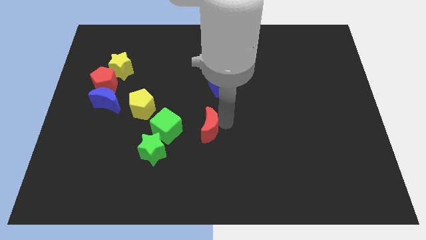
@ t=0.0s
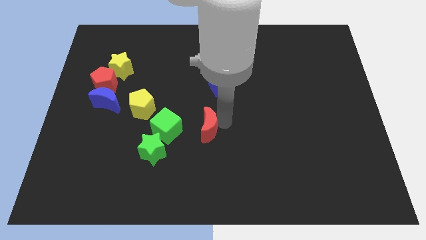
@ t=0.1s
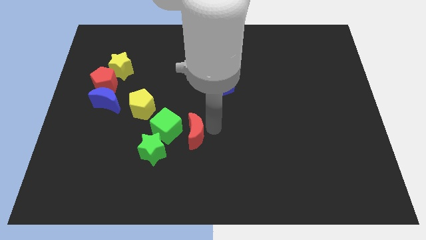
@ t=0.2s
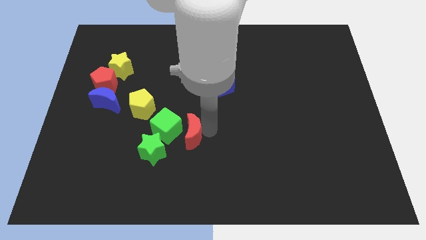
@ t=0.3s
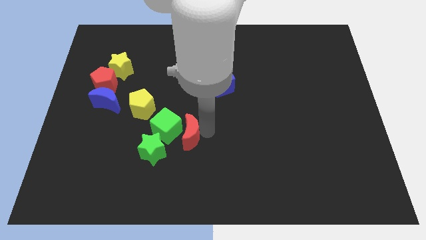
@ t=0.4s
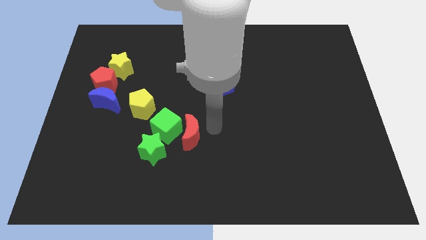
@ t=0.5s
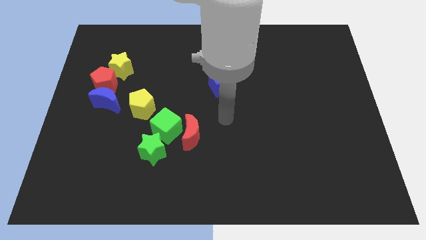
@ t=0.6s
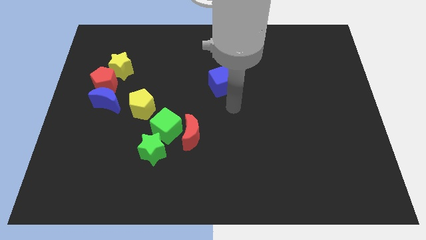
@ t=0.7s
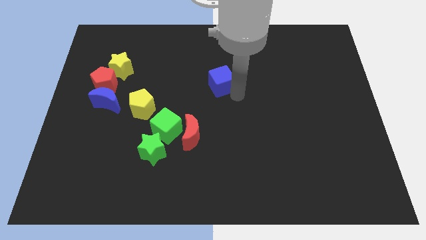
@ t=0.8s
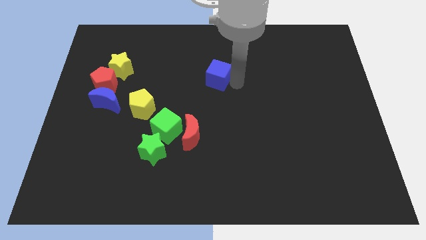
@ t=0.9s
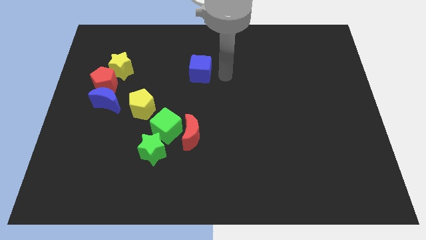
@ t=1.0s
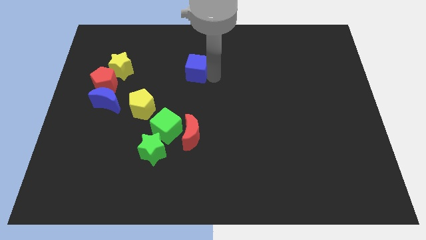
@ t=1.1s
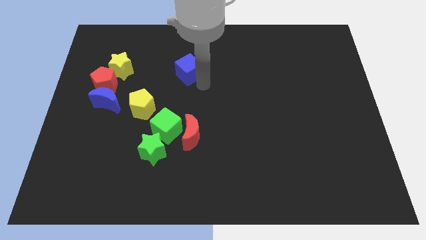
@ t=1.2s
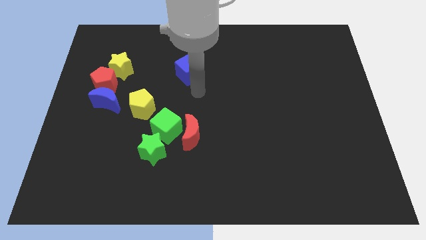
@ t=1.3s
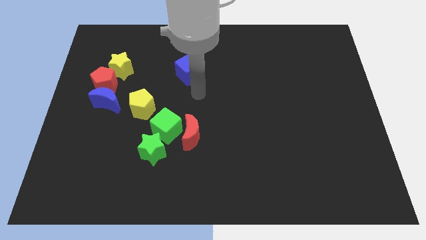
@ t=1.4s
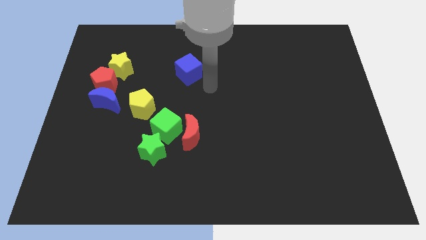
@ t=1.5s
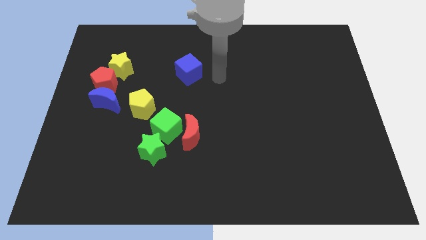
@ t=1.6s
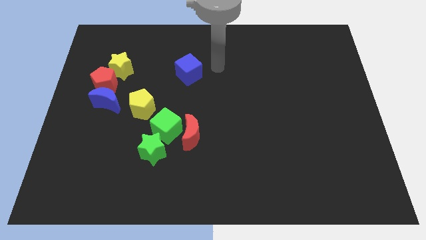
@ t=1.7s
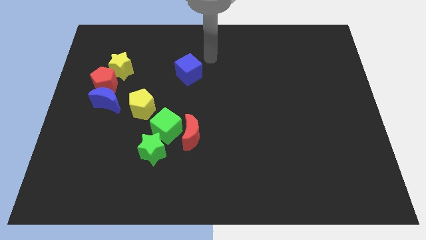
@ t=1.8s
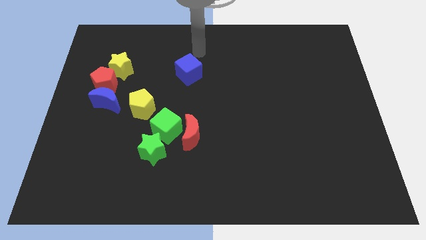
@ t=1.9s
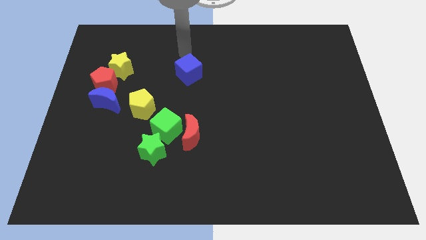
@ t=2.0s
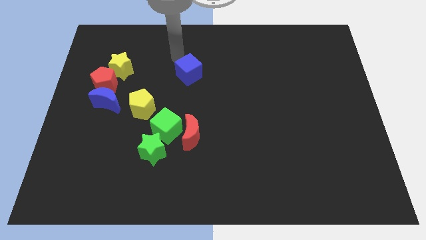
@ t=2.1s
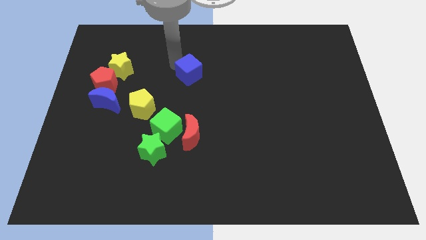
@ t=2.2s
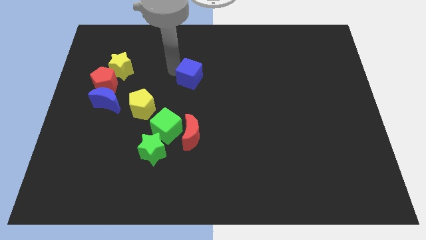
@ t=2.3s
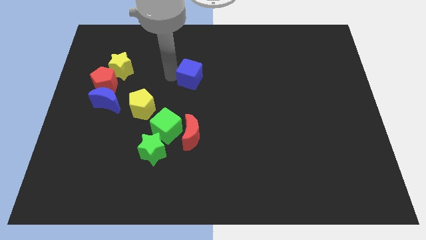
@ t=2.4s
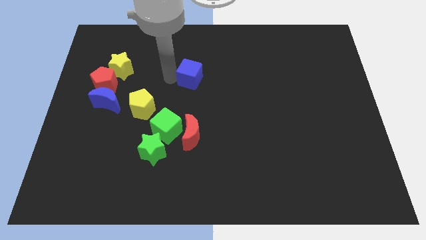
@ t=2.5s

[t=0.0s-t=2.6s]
point your arm left to blue cube

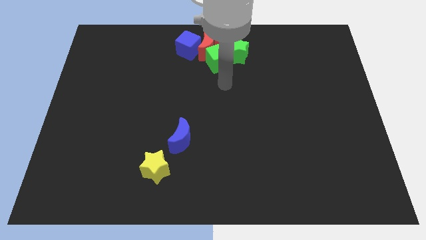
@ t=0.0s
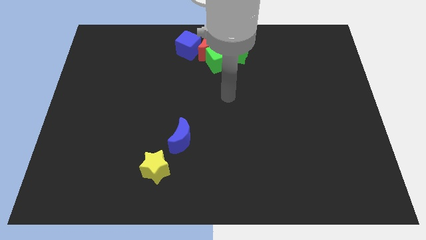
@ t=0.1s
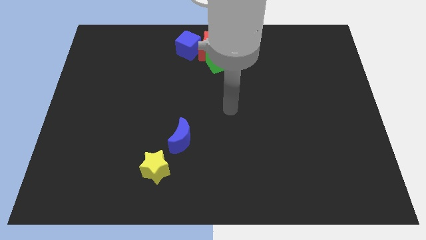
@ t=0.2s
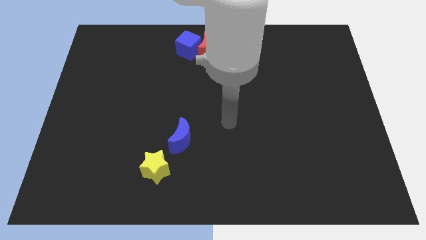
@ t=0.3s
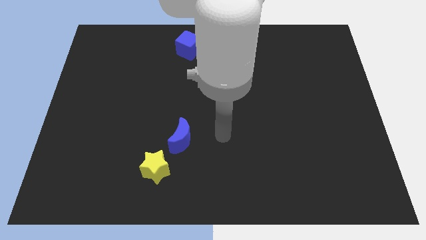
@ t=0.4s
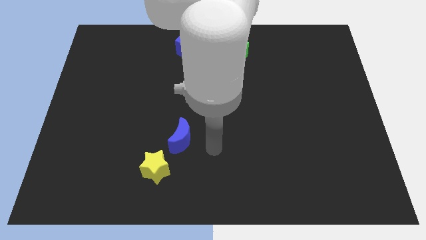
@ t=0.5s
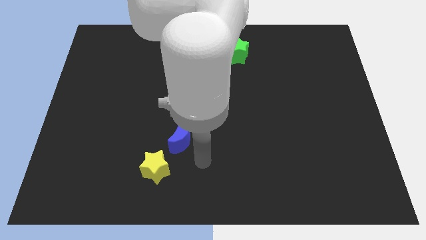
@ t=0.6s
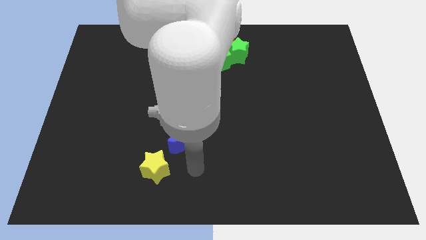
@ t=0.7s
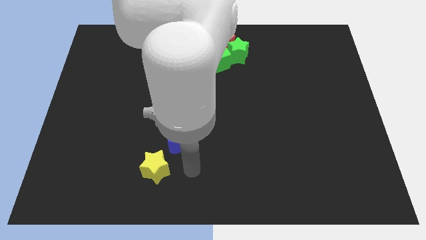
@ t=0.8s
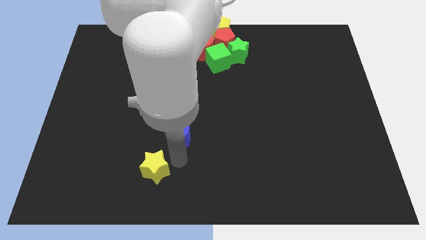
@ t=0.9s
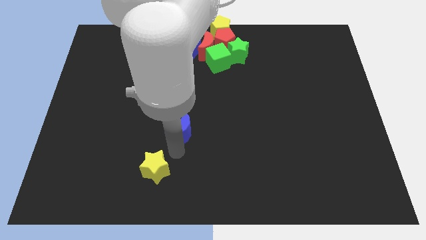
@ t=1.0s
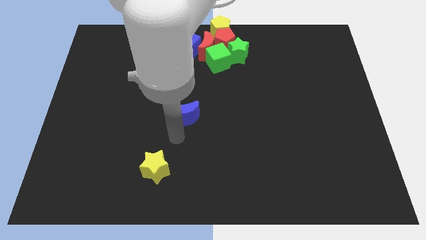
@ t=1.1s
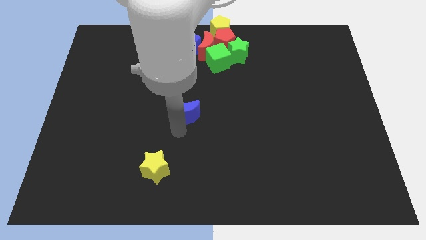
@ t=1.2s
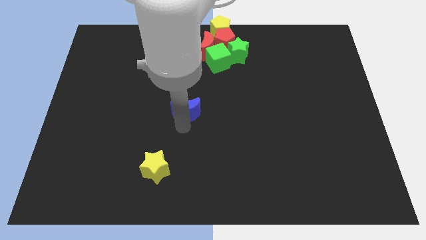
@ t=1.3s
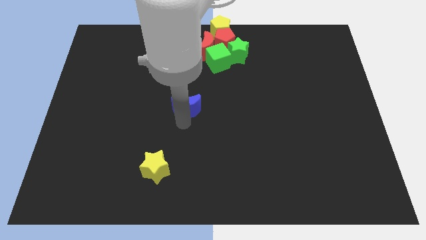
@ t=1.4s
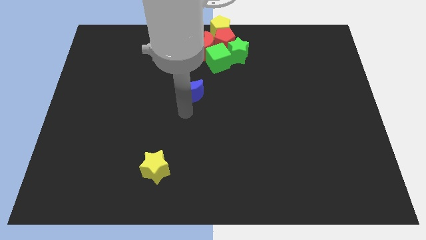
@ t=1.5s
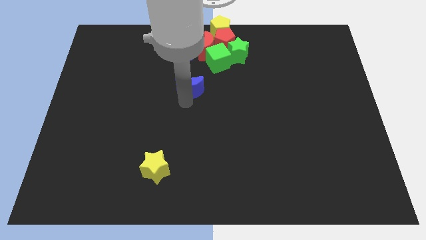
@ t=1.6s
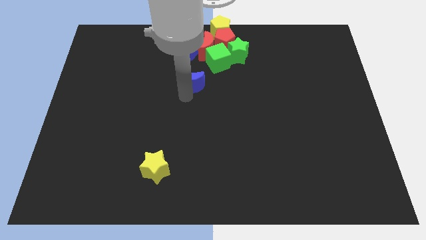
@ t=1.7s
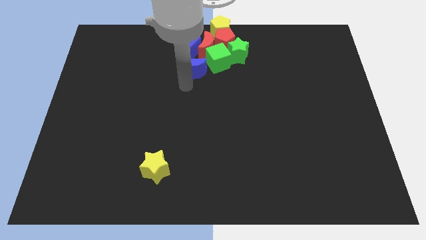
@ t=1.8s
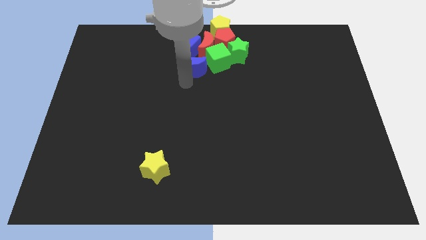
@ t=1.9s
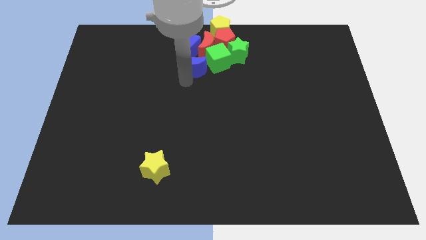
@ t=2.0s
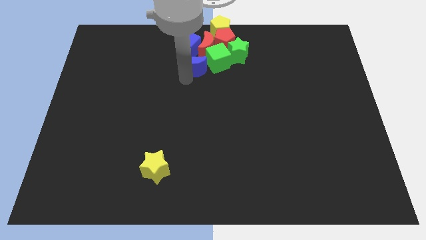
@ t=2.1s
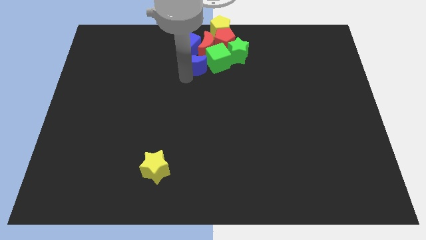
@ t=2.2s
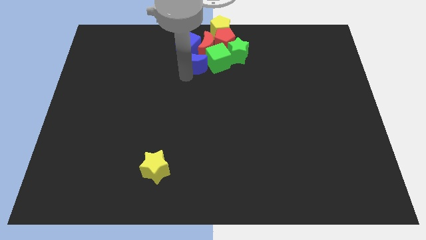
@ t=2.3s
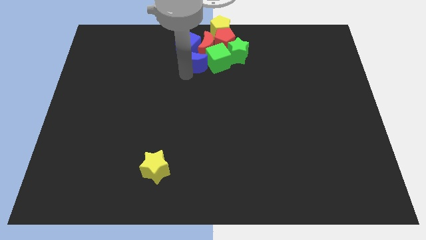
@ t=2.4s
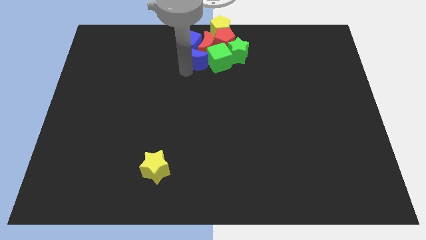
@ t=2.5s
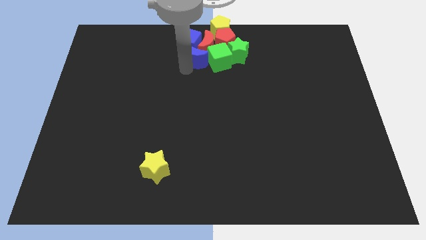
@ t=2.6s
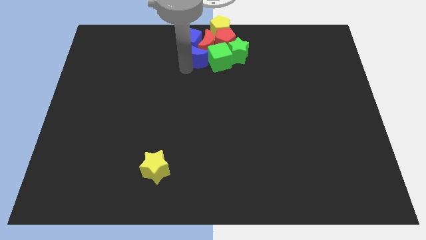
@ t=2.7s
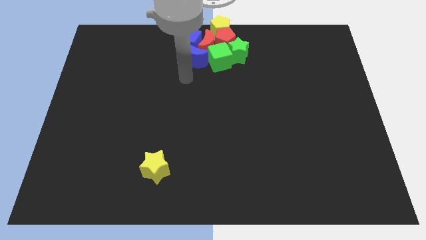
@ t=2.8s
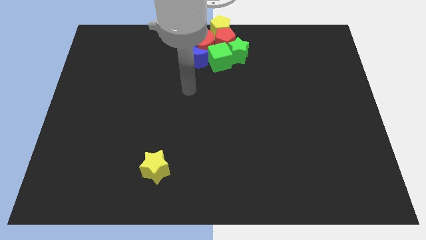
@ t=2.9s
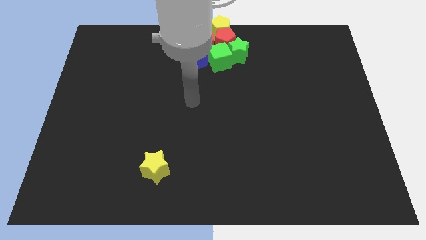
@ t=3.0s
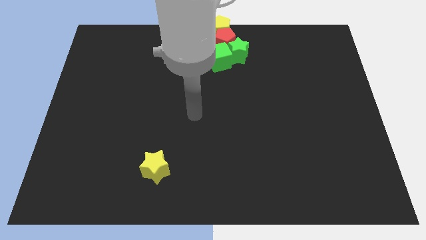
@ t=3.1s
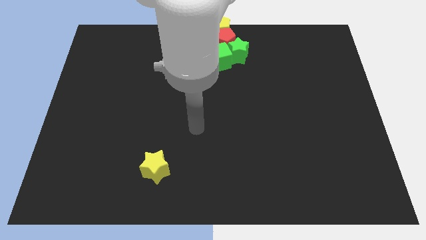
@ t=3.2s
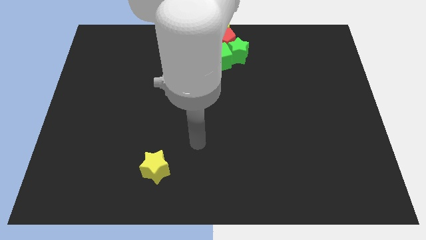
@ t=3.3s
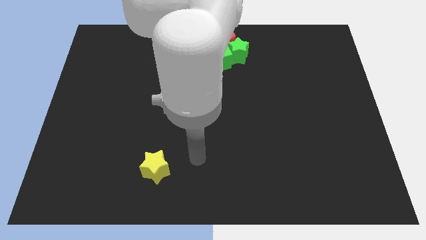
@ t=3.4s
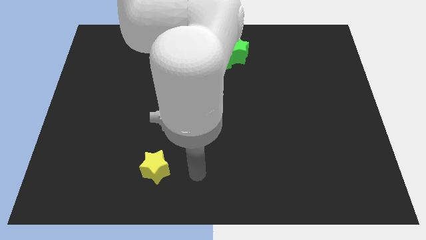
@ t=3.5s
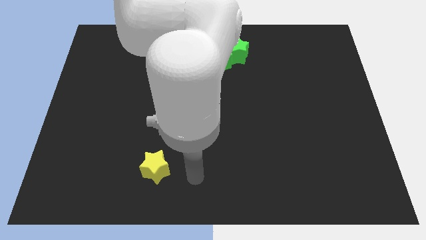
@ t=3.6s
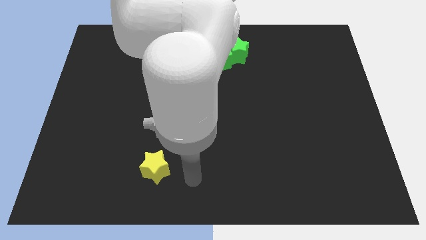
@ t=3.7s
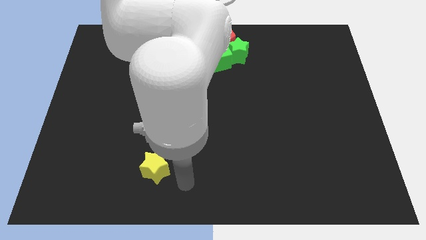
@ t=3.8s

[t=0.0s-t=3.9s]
push the blue crescent into the group of blocks

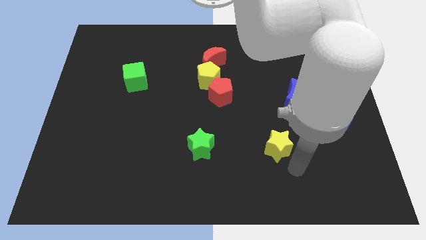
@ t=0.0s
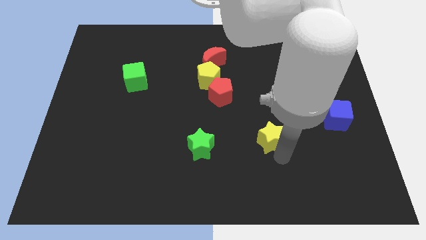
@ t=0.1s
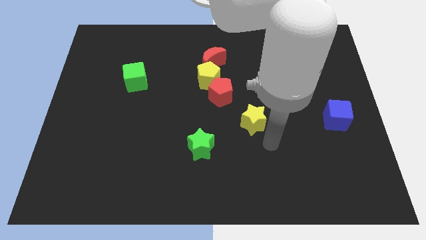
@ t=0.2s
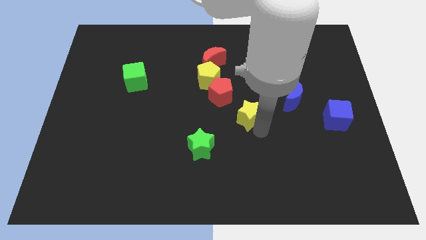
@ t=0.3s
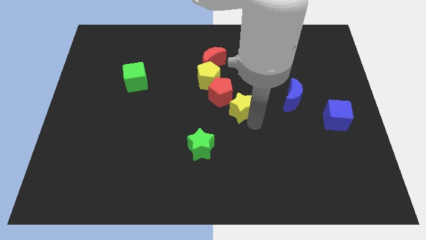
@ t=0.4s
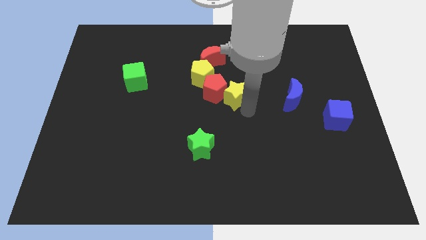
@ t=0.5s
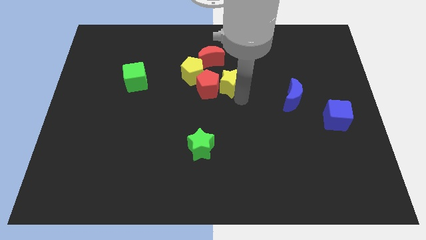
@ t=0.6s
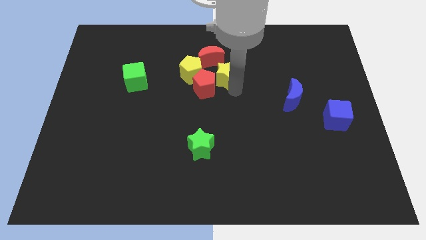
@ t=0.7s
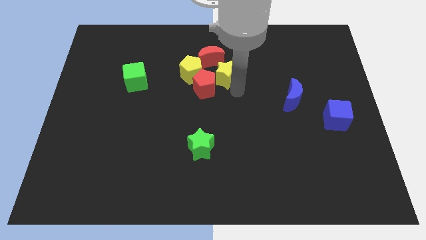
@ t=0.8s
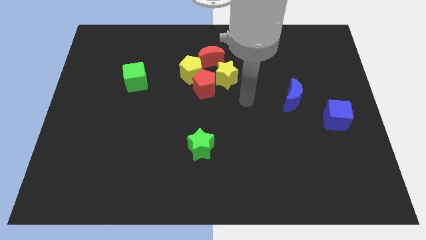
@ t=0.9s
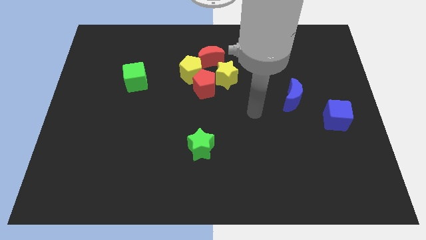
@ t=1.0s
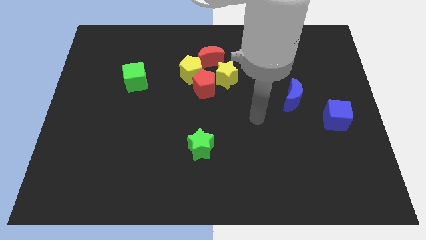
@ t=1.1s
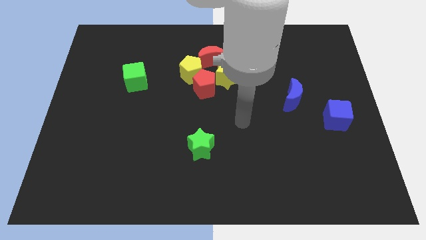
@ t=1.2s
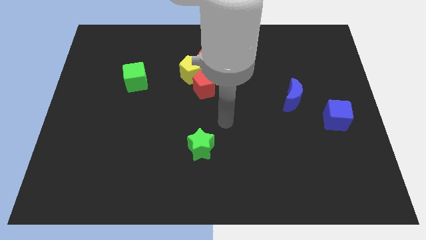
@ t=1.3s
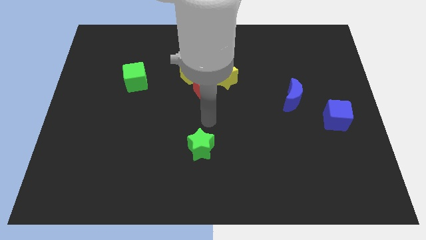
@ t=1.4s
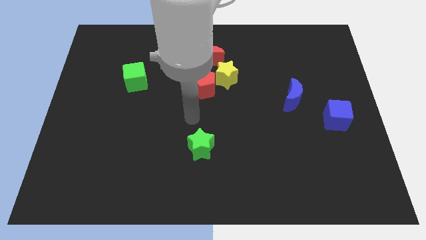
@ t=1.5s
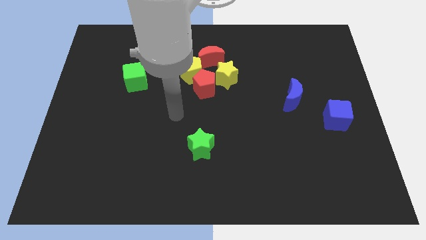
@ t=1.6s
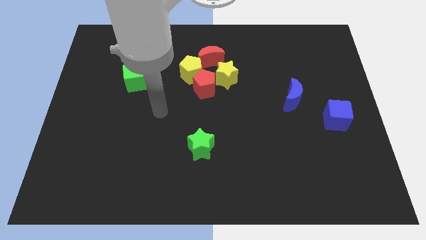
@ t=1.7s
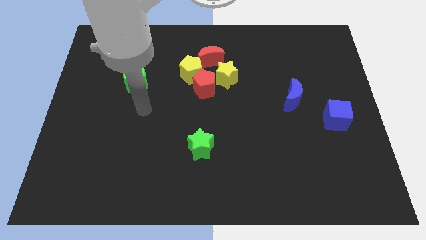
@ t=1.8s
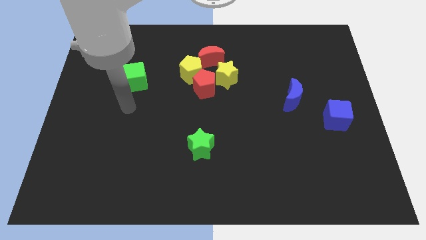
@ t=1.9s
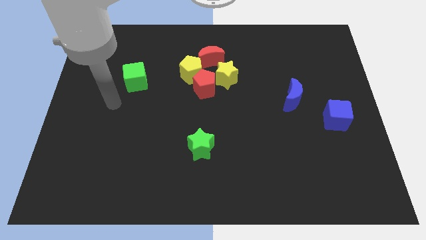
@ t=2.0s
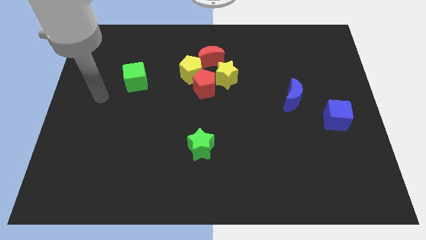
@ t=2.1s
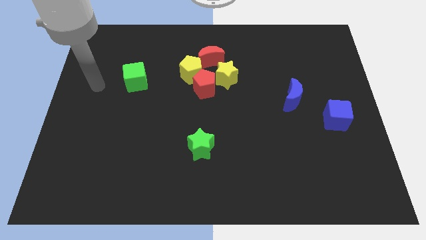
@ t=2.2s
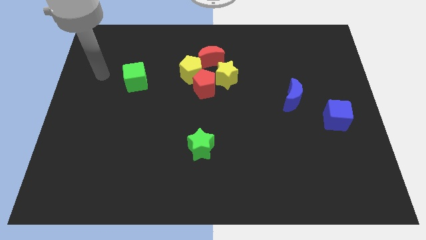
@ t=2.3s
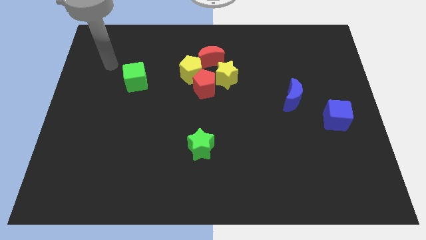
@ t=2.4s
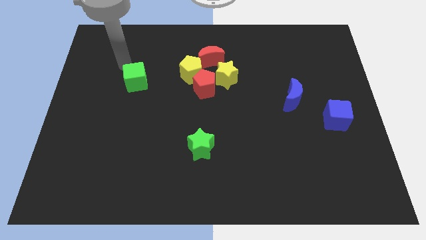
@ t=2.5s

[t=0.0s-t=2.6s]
move the yellow star into a group of objects
